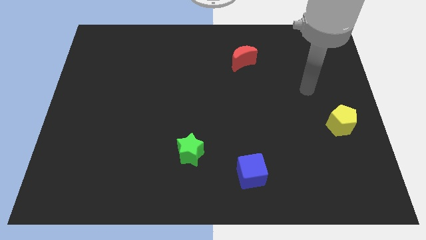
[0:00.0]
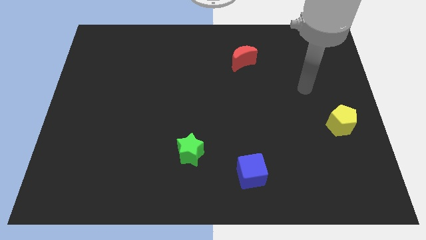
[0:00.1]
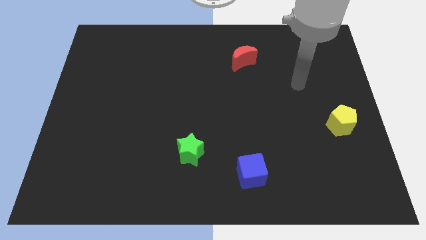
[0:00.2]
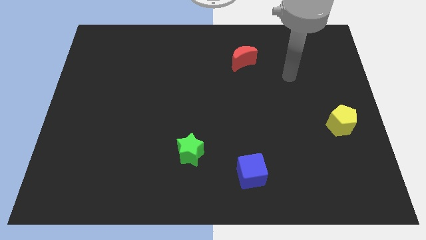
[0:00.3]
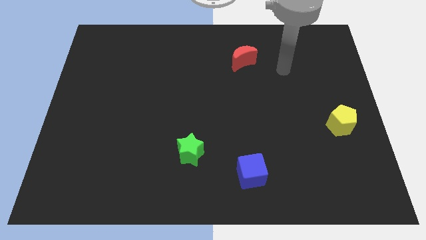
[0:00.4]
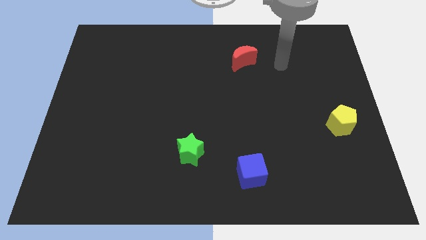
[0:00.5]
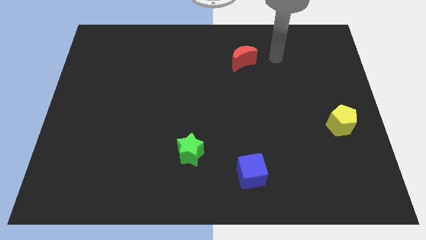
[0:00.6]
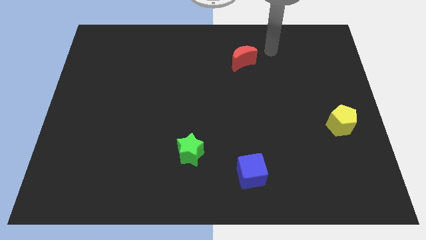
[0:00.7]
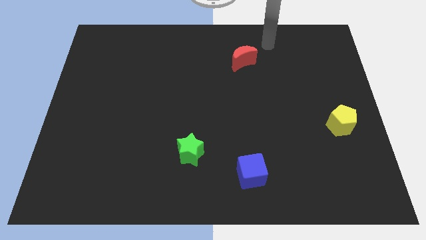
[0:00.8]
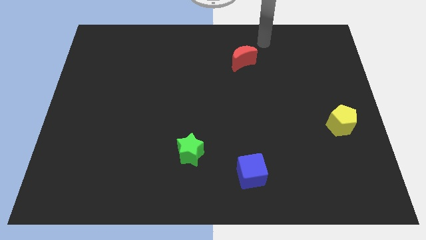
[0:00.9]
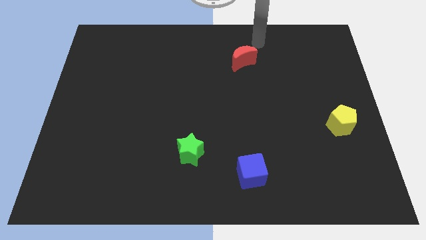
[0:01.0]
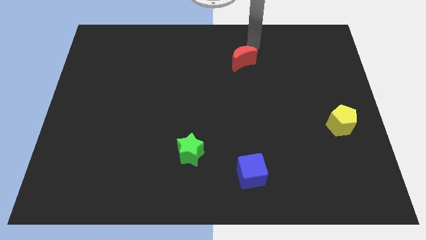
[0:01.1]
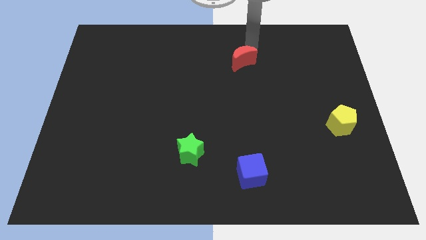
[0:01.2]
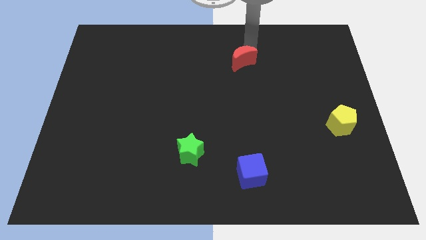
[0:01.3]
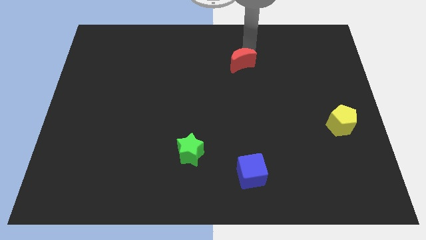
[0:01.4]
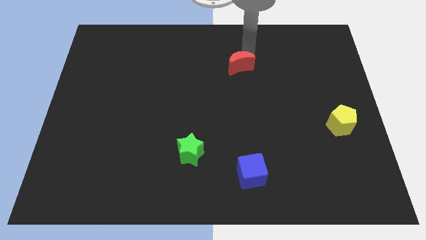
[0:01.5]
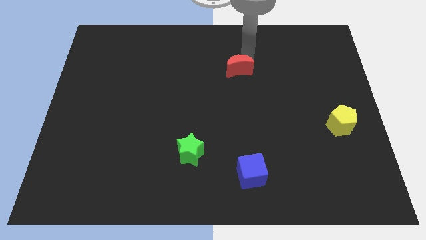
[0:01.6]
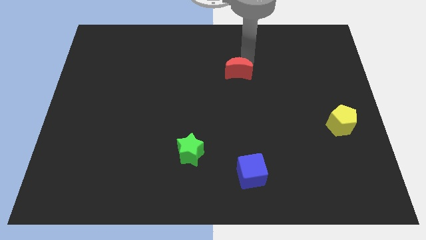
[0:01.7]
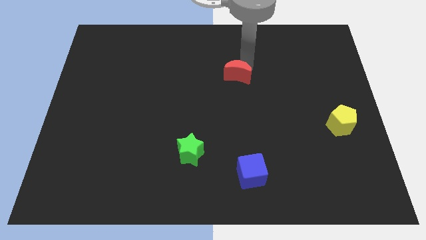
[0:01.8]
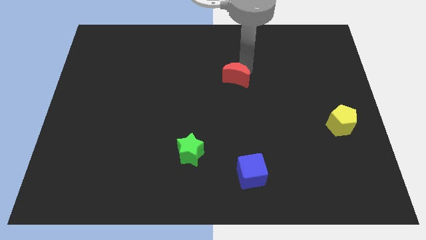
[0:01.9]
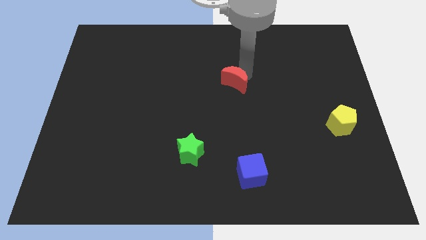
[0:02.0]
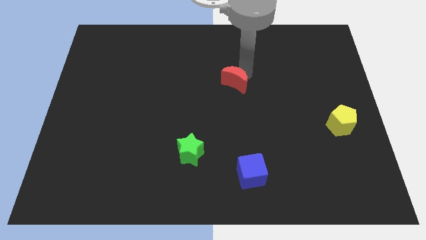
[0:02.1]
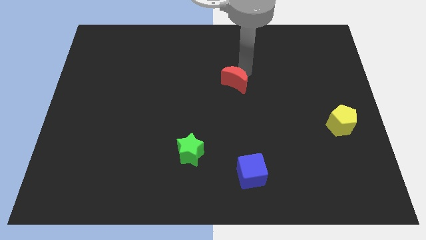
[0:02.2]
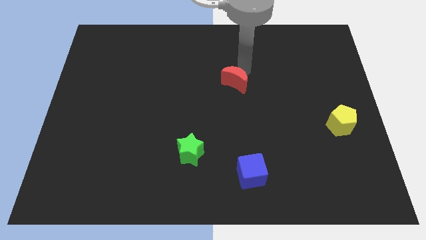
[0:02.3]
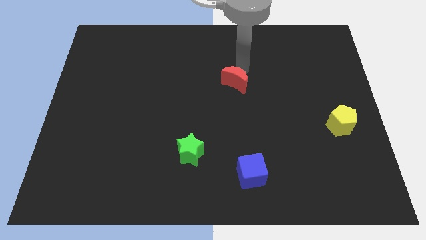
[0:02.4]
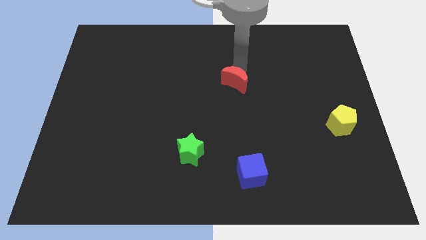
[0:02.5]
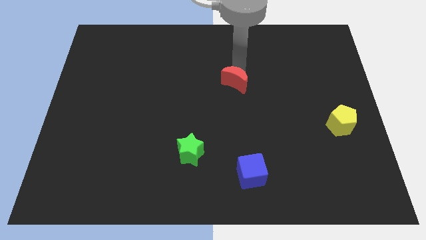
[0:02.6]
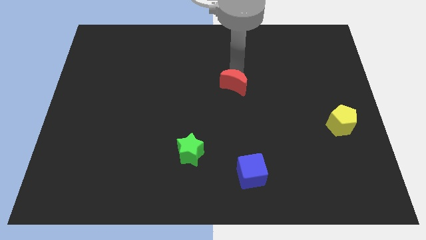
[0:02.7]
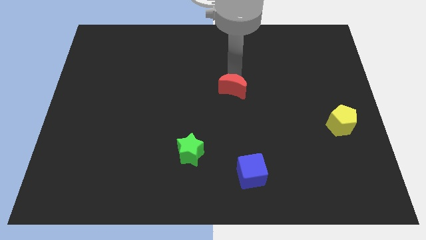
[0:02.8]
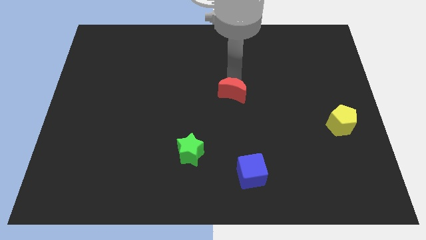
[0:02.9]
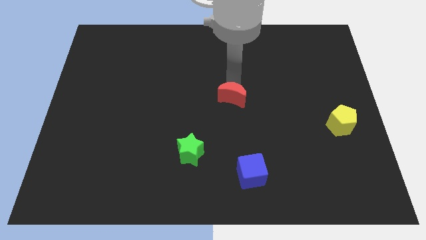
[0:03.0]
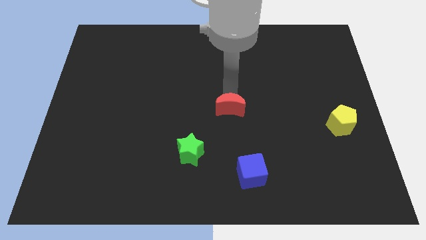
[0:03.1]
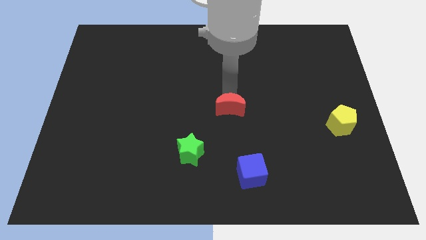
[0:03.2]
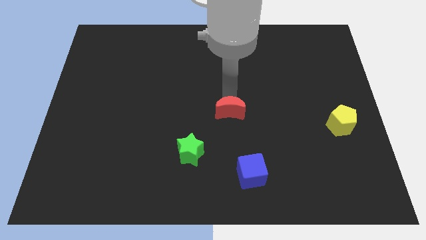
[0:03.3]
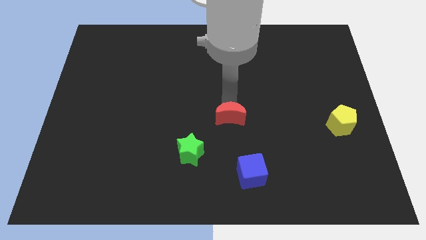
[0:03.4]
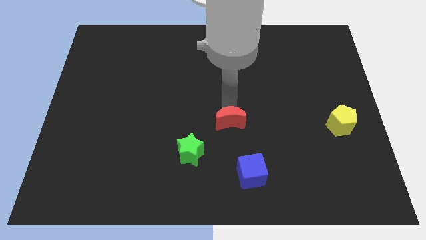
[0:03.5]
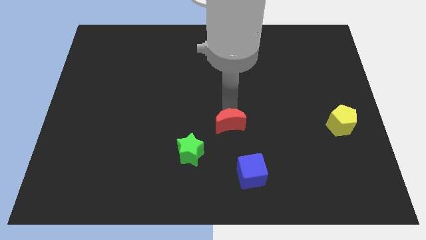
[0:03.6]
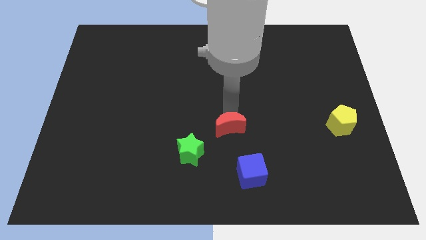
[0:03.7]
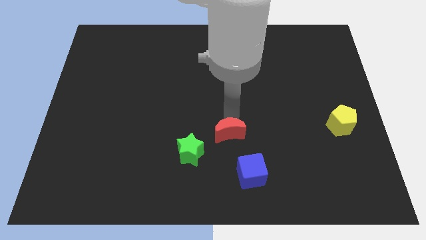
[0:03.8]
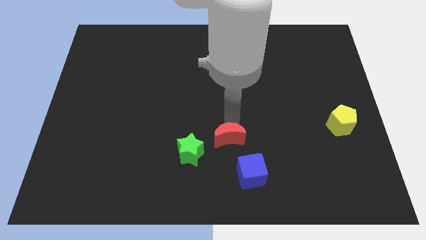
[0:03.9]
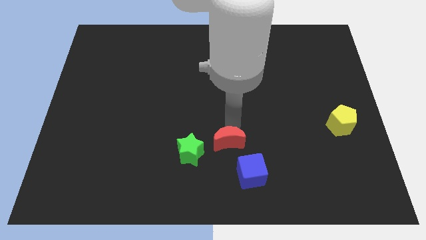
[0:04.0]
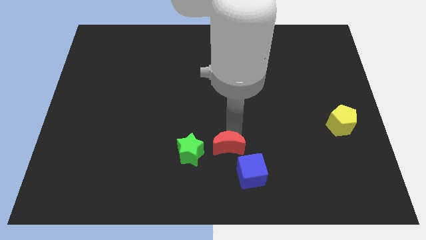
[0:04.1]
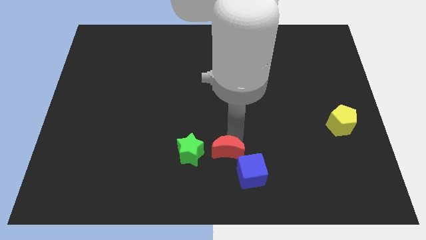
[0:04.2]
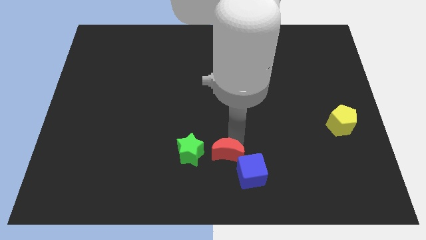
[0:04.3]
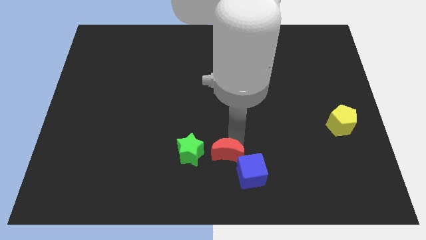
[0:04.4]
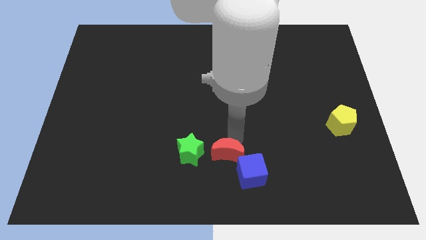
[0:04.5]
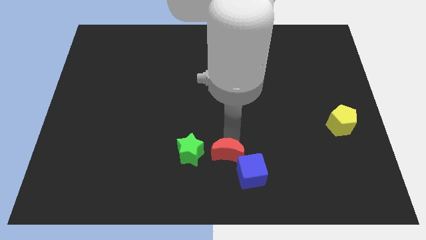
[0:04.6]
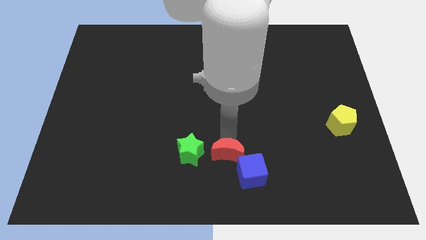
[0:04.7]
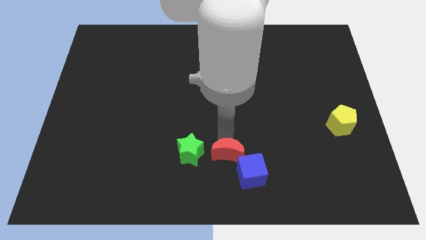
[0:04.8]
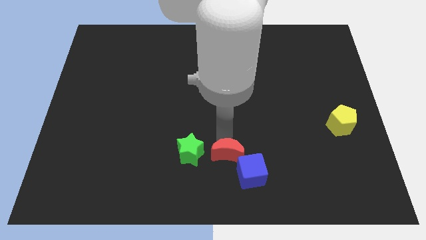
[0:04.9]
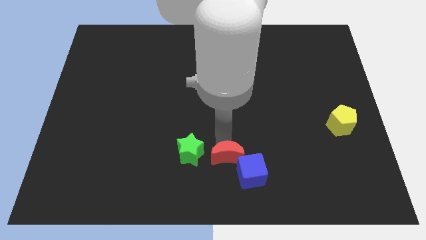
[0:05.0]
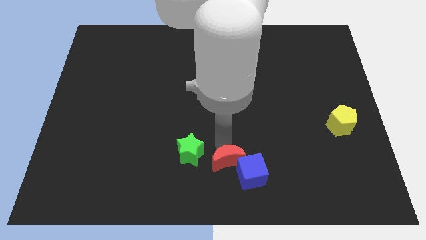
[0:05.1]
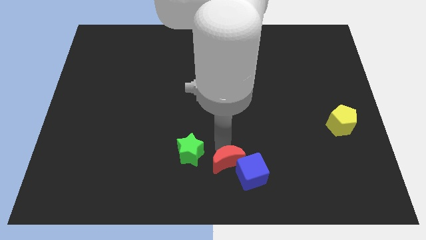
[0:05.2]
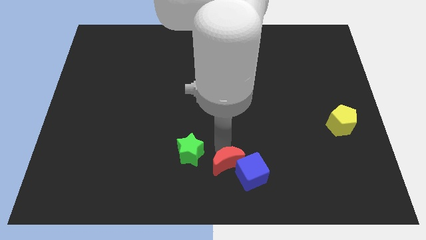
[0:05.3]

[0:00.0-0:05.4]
move the red block next to the blue block

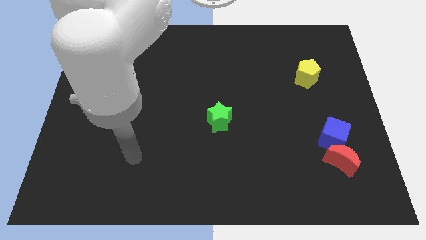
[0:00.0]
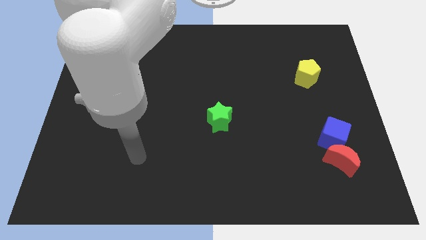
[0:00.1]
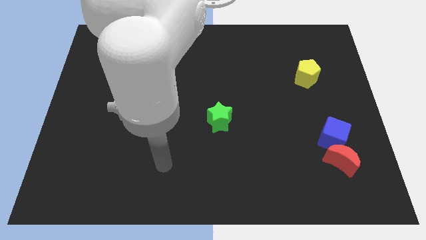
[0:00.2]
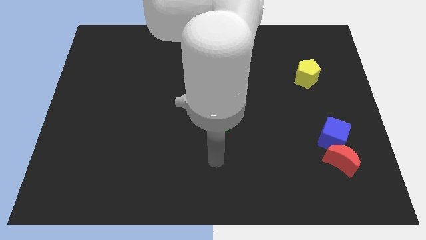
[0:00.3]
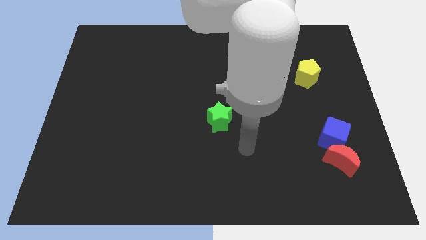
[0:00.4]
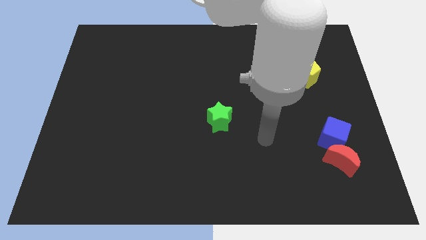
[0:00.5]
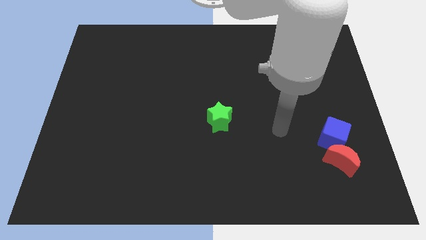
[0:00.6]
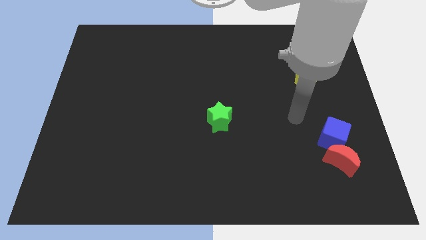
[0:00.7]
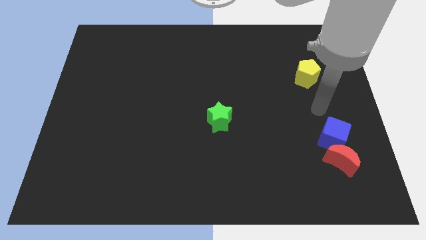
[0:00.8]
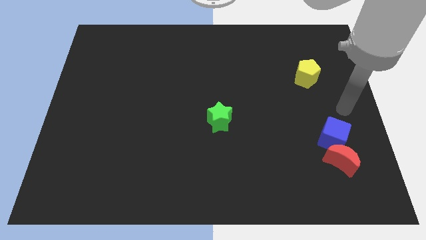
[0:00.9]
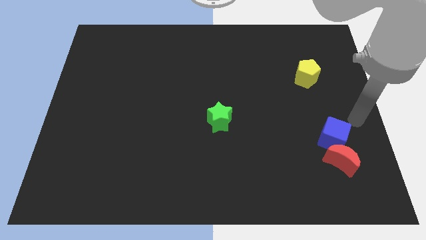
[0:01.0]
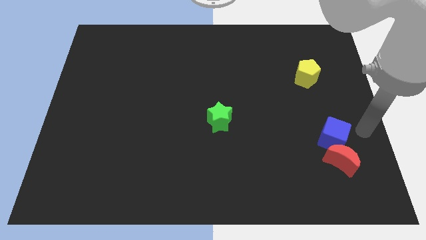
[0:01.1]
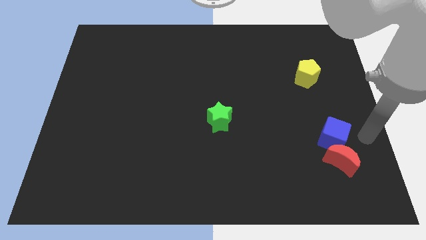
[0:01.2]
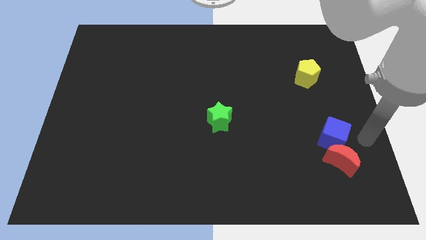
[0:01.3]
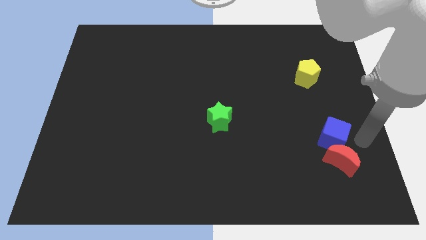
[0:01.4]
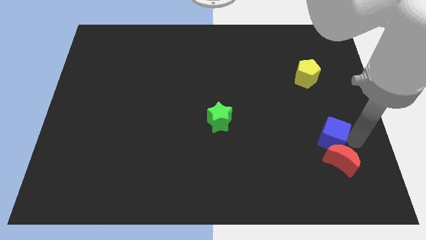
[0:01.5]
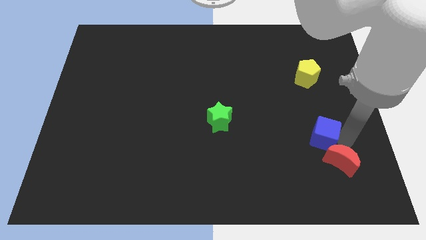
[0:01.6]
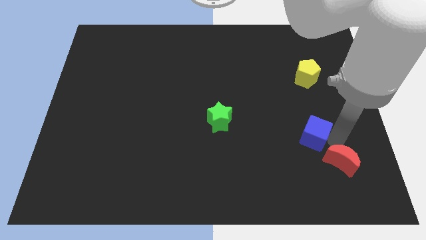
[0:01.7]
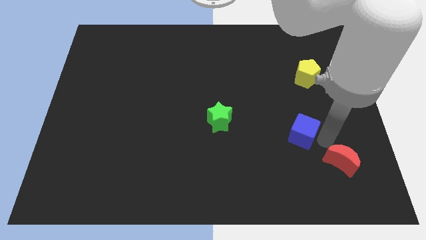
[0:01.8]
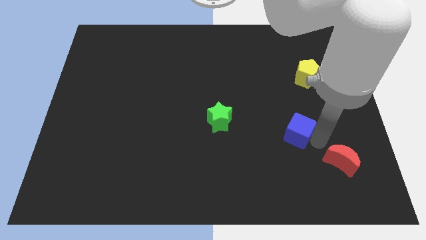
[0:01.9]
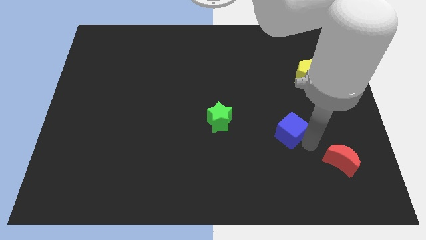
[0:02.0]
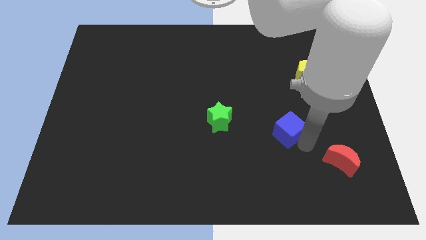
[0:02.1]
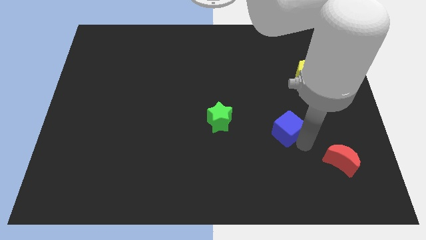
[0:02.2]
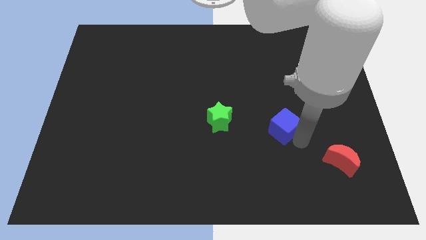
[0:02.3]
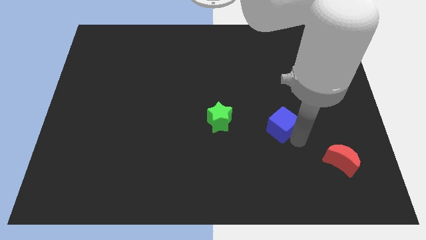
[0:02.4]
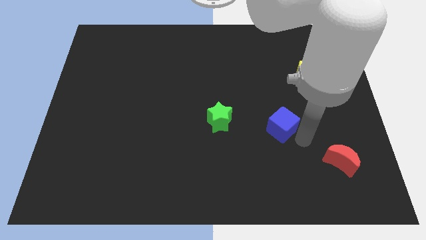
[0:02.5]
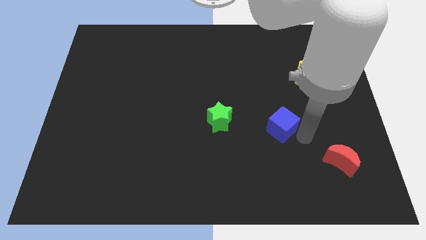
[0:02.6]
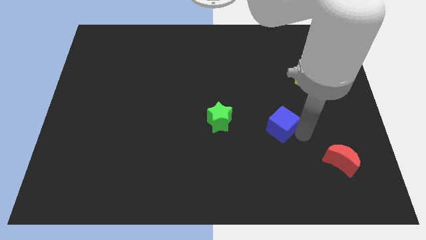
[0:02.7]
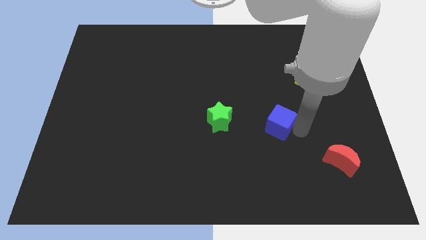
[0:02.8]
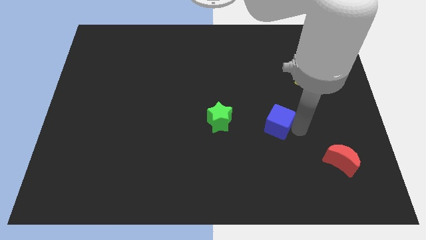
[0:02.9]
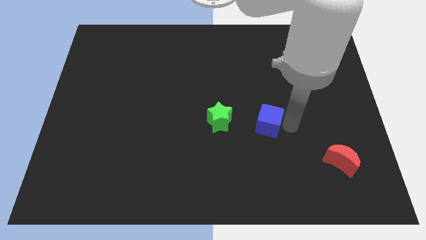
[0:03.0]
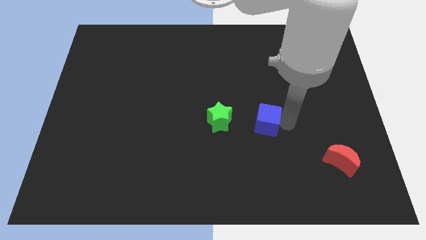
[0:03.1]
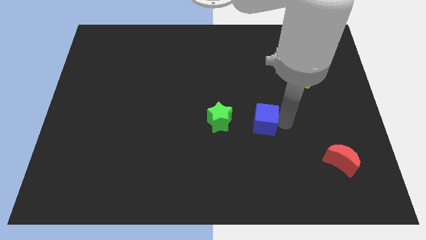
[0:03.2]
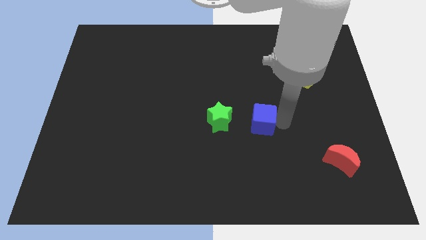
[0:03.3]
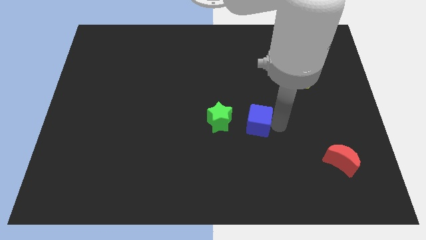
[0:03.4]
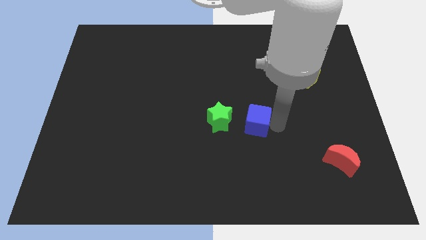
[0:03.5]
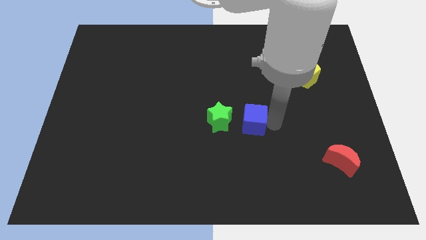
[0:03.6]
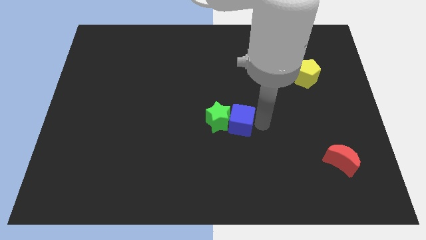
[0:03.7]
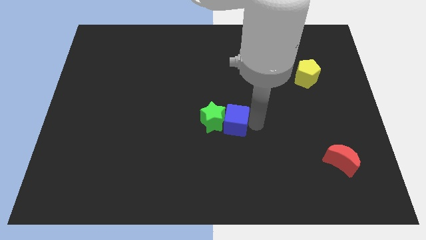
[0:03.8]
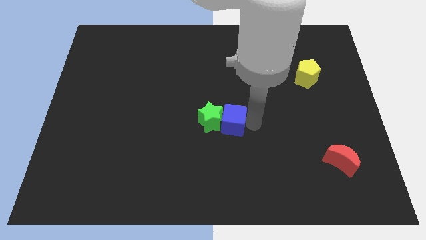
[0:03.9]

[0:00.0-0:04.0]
slide the blue block to the green star
